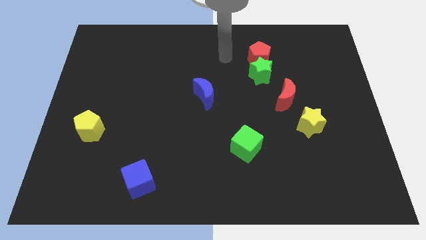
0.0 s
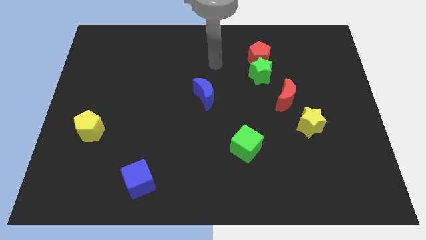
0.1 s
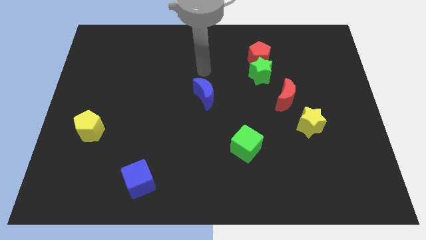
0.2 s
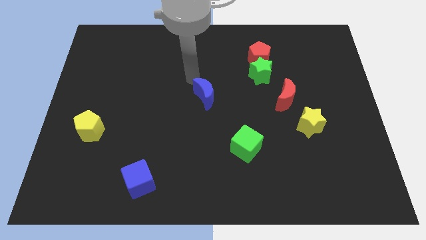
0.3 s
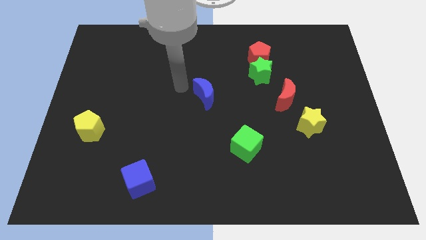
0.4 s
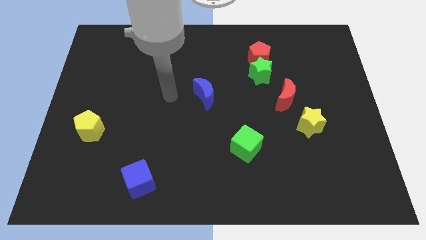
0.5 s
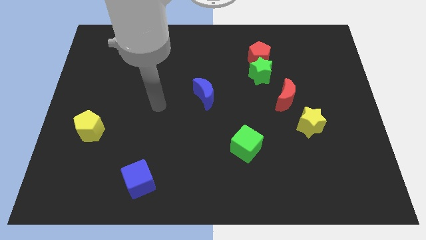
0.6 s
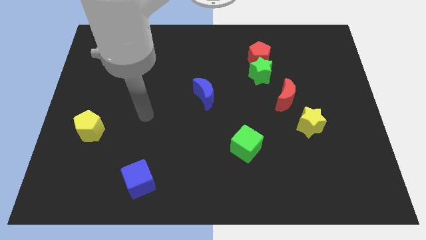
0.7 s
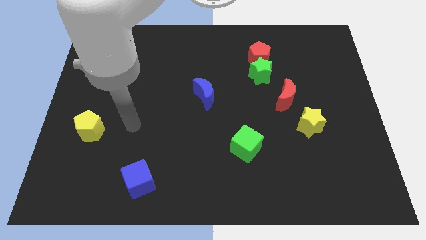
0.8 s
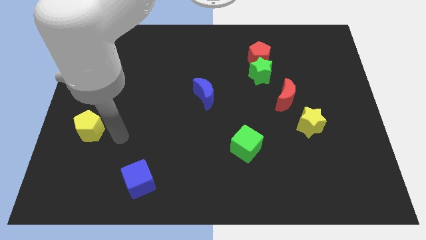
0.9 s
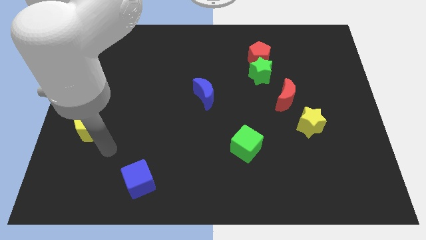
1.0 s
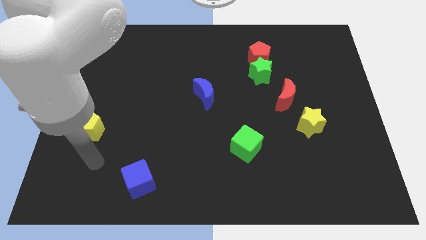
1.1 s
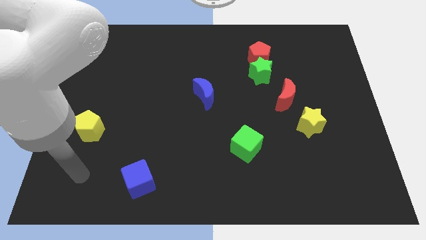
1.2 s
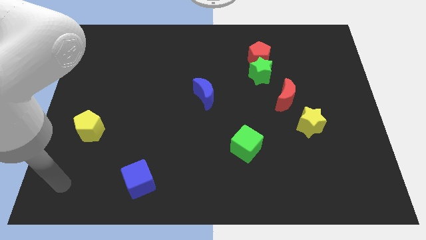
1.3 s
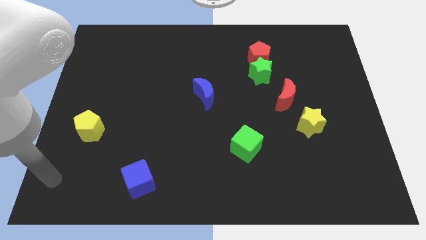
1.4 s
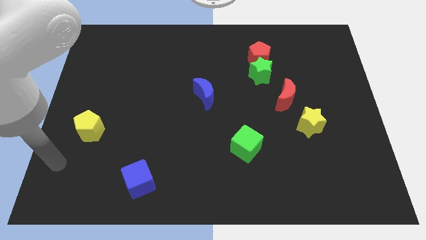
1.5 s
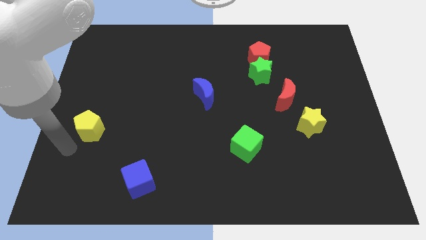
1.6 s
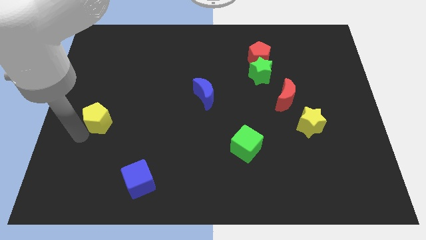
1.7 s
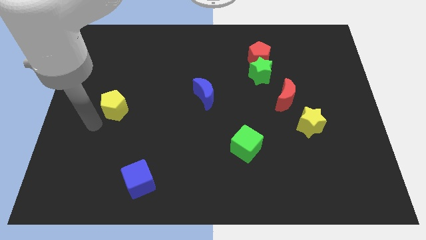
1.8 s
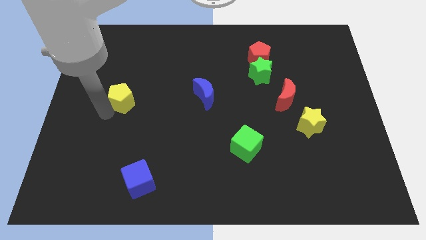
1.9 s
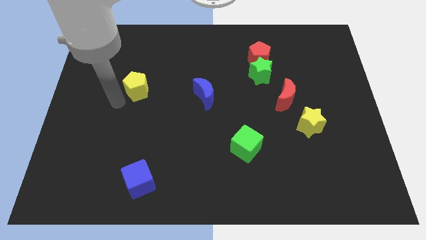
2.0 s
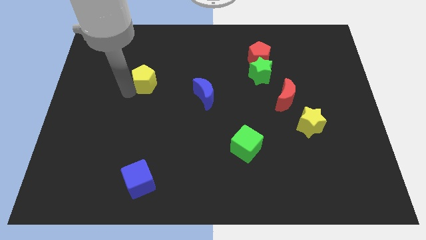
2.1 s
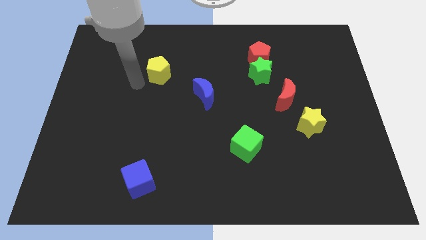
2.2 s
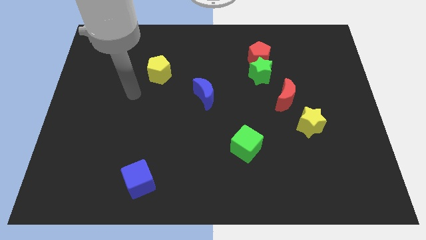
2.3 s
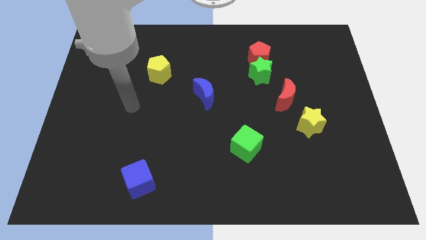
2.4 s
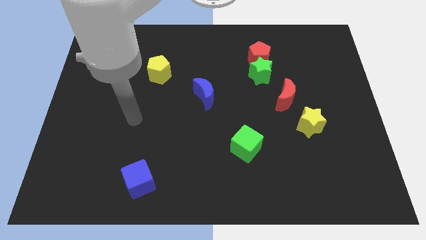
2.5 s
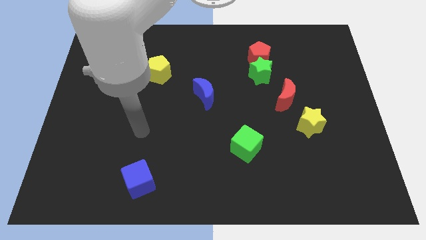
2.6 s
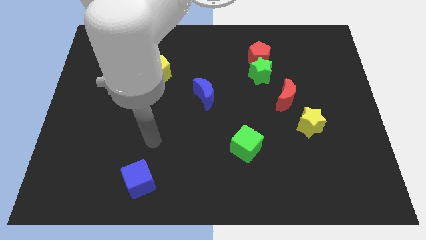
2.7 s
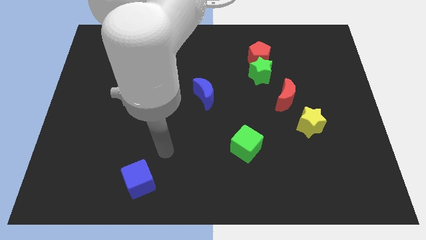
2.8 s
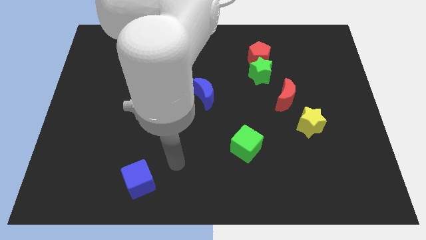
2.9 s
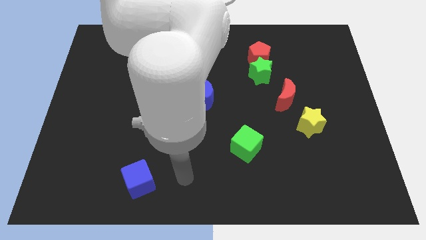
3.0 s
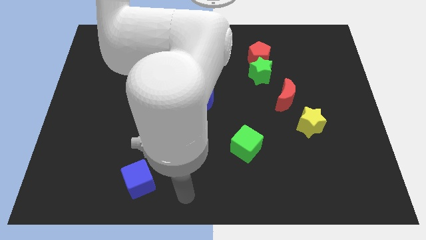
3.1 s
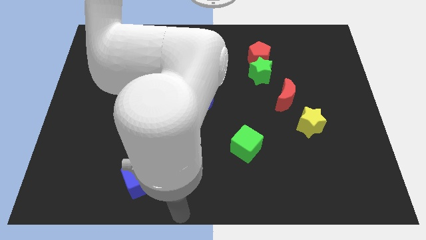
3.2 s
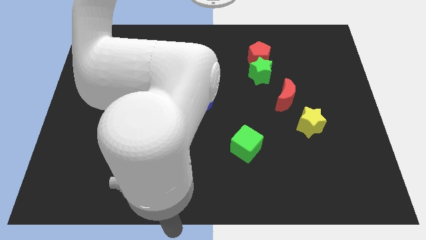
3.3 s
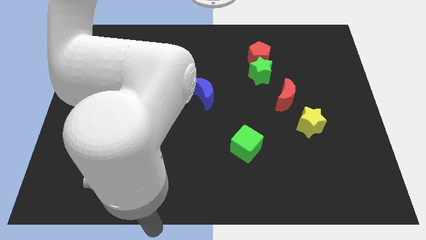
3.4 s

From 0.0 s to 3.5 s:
move the yellow pentagon parallel to the top of the blue crescent

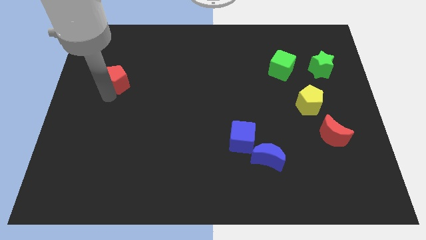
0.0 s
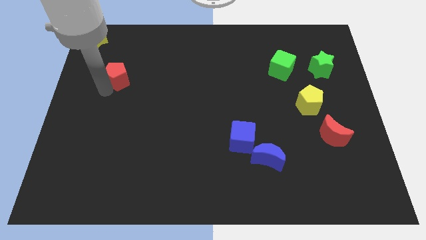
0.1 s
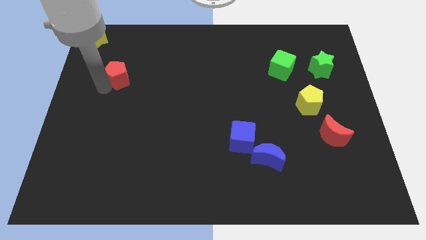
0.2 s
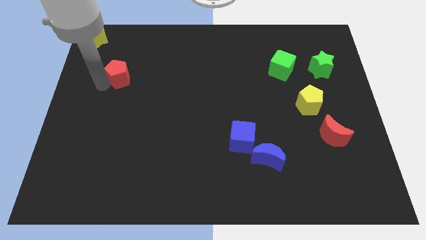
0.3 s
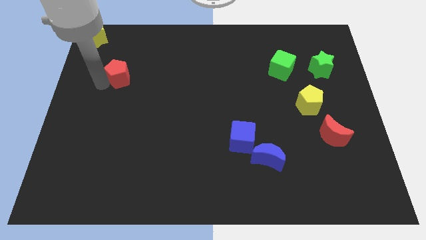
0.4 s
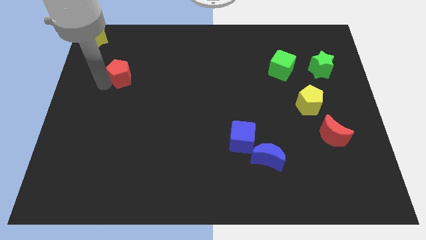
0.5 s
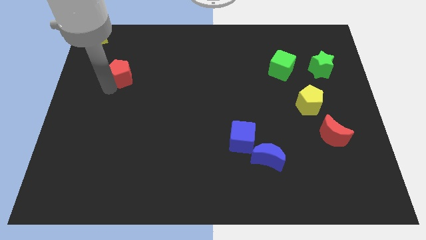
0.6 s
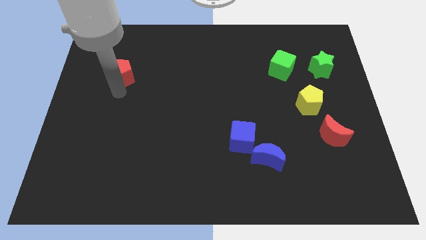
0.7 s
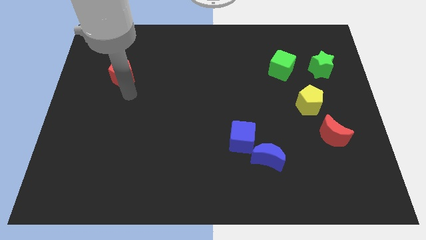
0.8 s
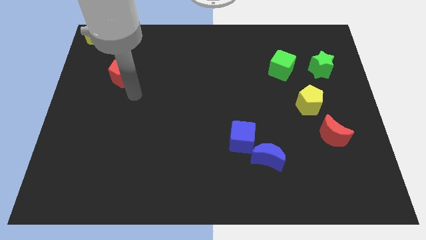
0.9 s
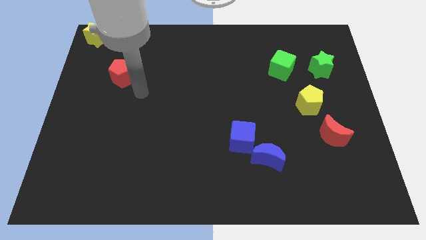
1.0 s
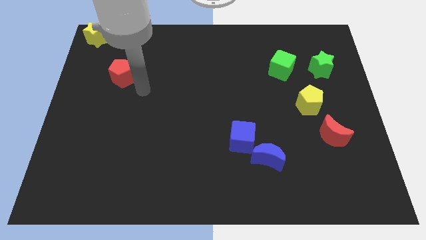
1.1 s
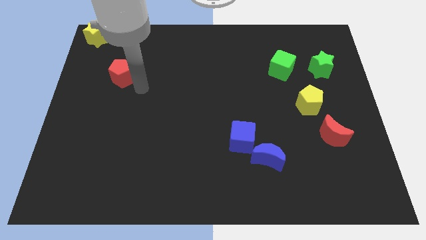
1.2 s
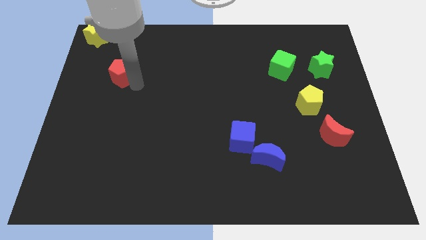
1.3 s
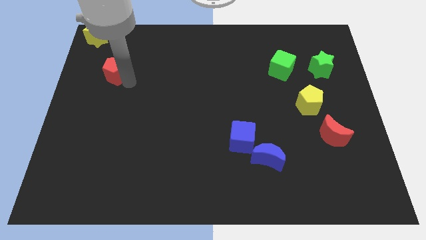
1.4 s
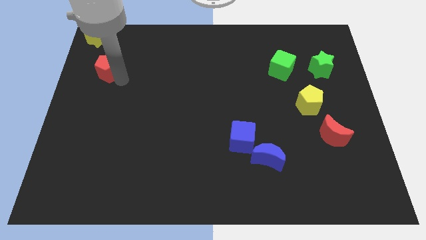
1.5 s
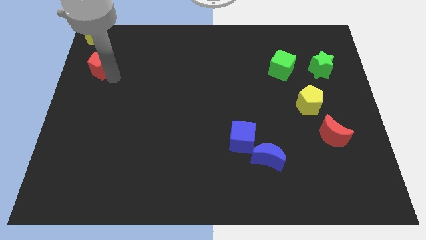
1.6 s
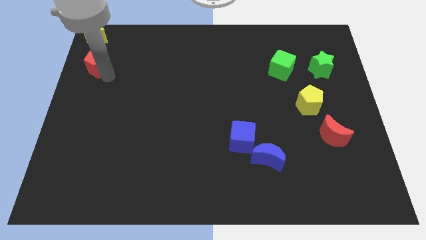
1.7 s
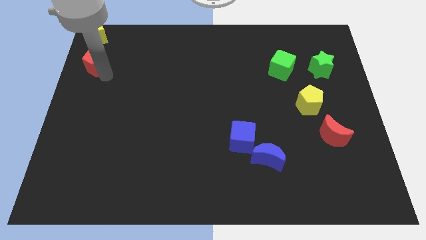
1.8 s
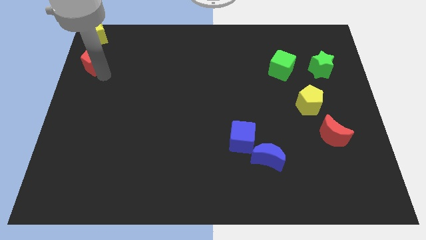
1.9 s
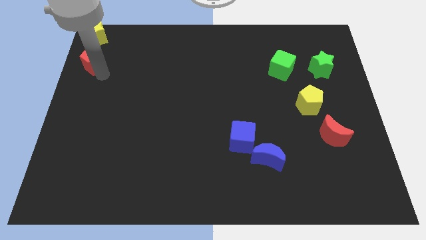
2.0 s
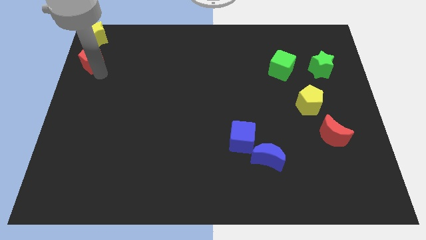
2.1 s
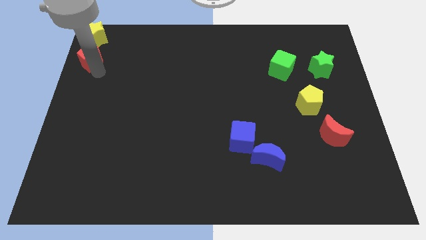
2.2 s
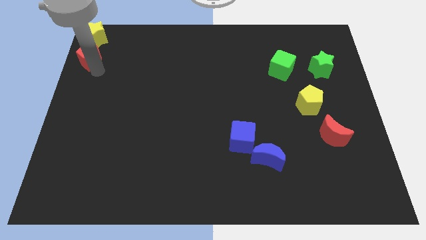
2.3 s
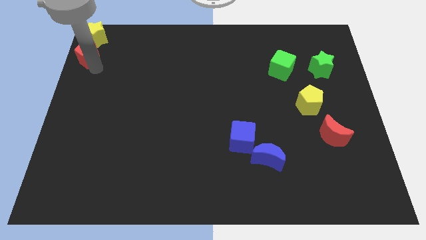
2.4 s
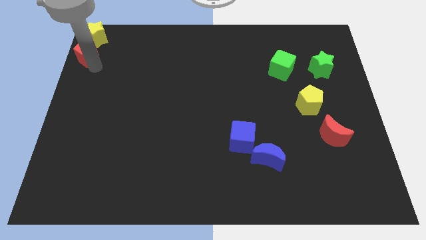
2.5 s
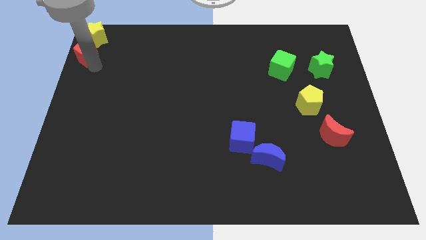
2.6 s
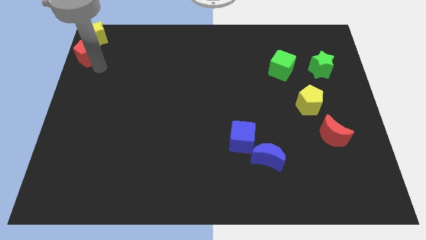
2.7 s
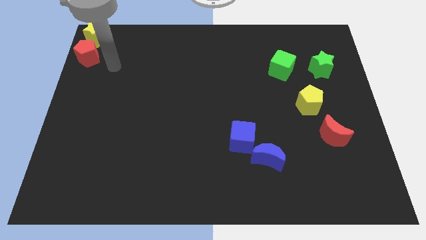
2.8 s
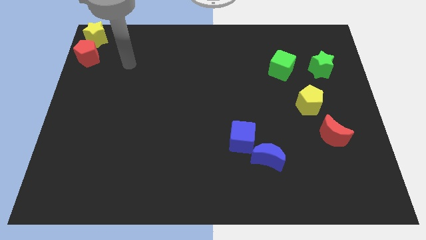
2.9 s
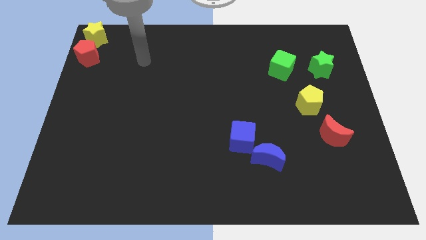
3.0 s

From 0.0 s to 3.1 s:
place the red pentagon at the bottom of yellow star

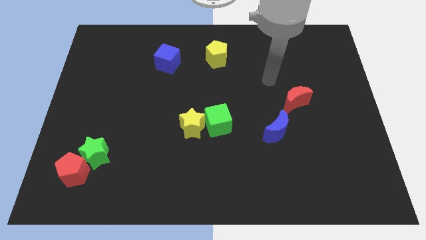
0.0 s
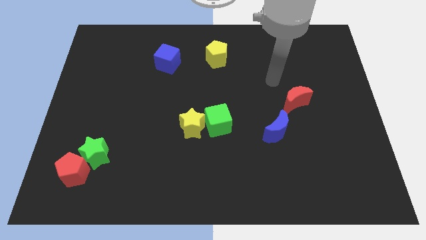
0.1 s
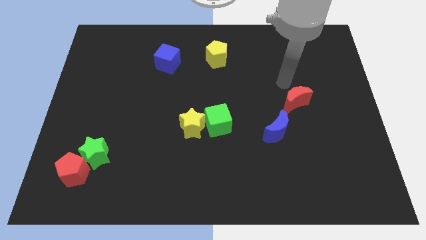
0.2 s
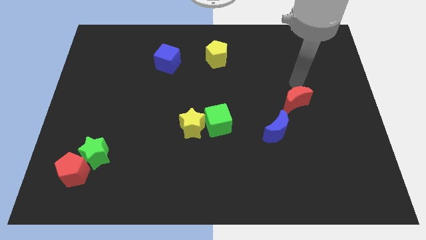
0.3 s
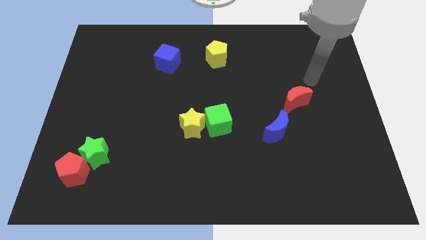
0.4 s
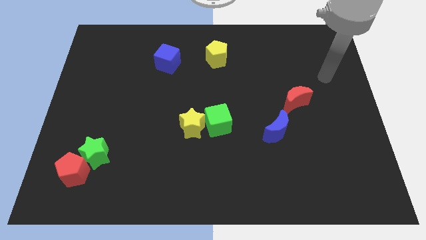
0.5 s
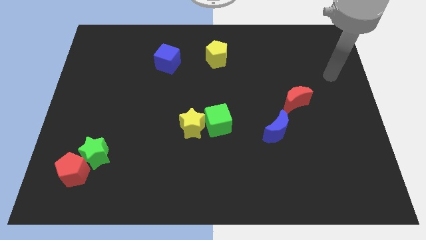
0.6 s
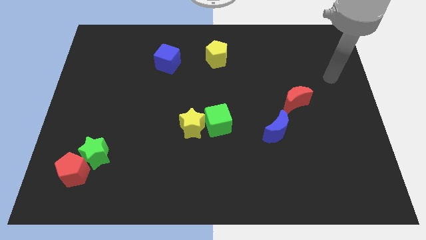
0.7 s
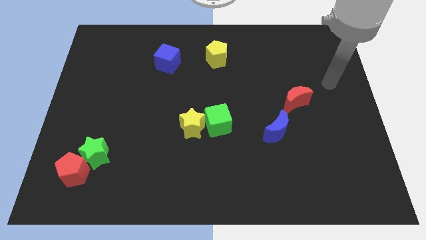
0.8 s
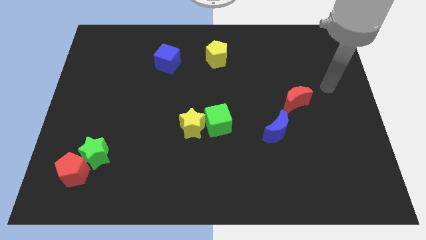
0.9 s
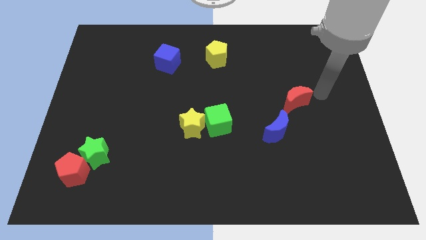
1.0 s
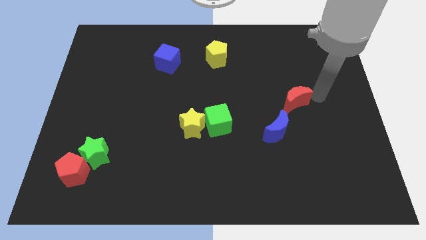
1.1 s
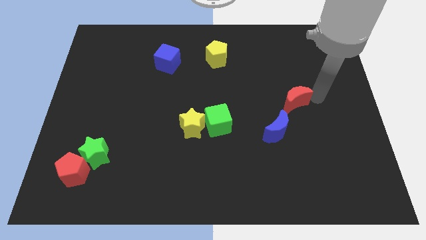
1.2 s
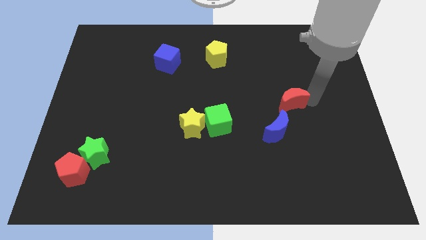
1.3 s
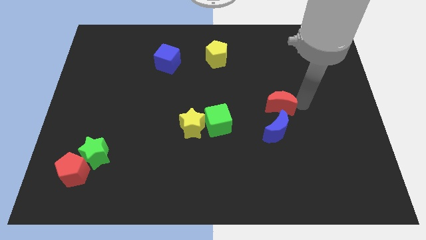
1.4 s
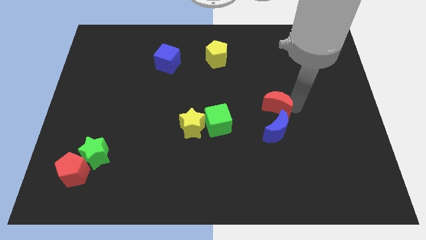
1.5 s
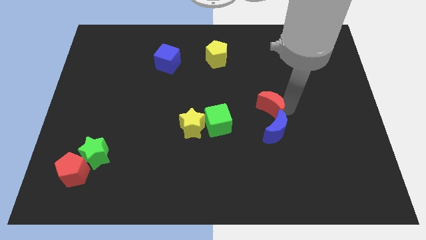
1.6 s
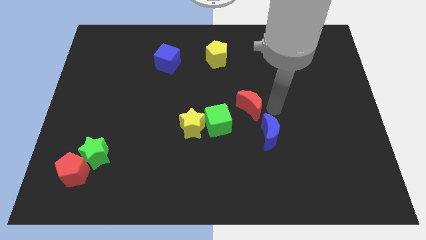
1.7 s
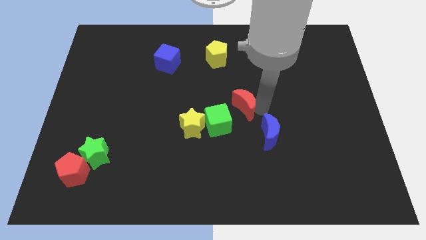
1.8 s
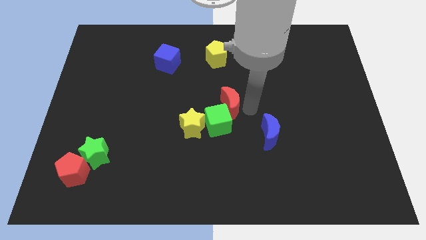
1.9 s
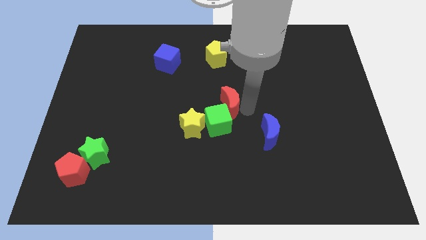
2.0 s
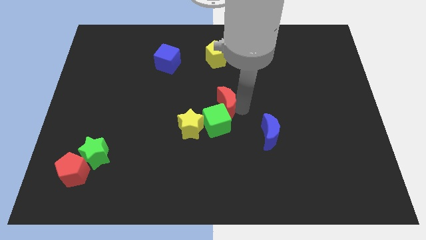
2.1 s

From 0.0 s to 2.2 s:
move the red crescent to the right of the green cube

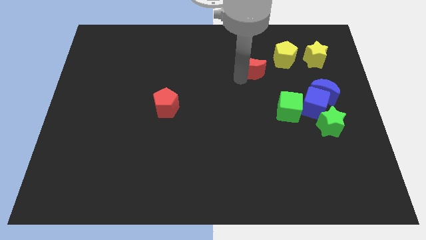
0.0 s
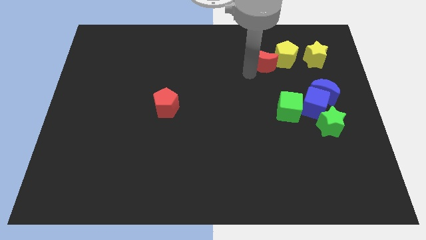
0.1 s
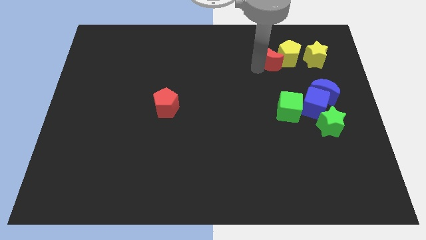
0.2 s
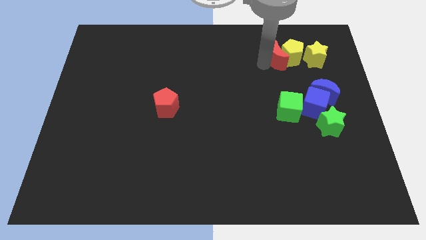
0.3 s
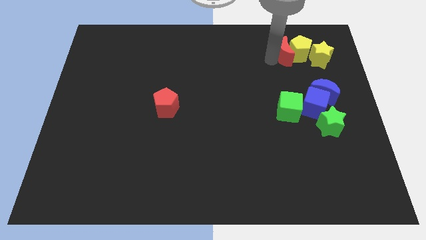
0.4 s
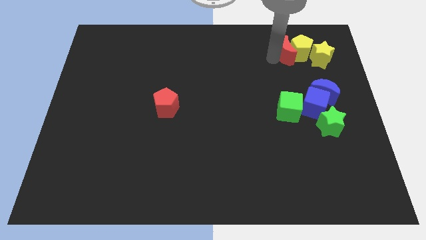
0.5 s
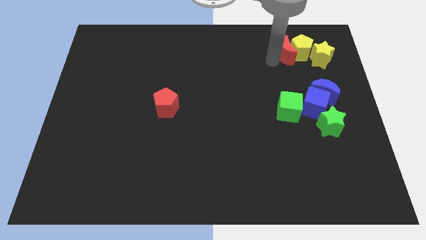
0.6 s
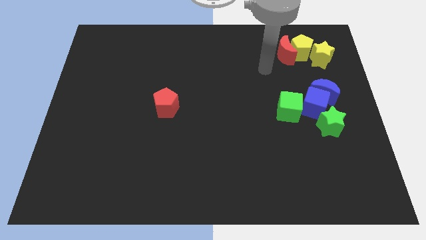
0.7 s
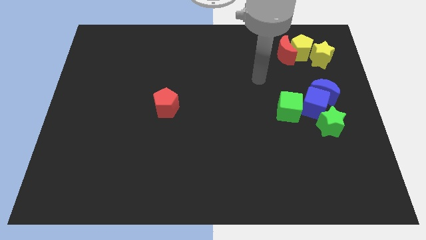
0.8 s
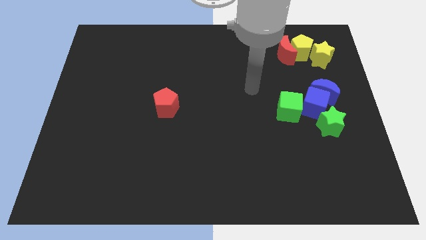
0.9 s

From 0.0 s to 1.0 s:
push red moon in to yellow blocks
